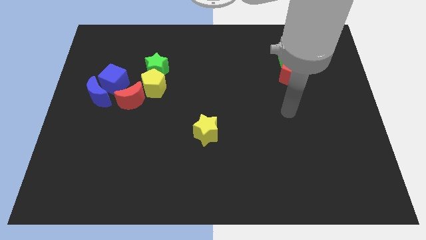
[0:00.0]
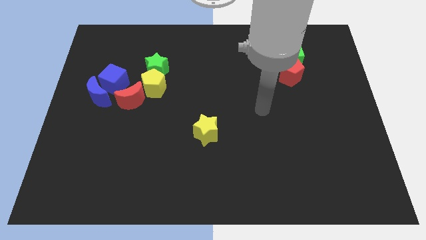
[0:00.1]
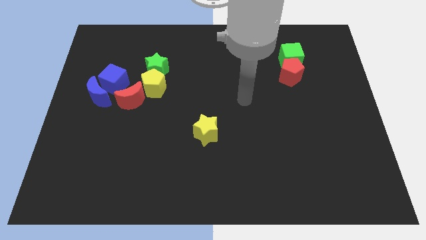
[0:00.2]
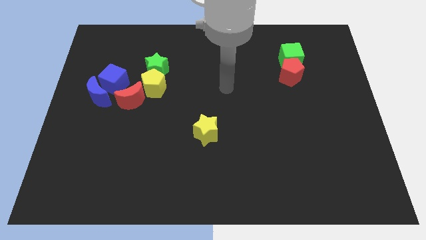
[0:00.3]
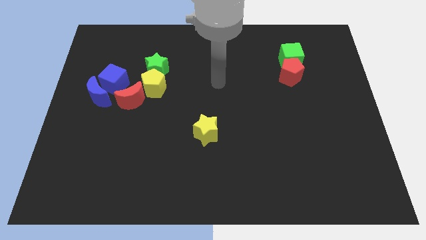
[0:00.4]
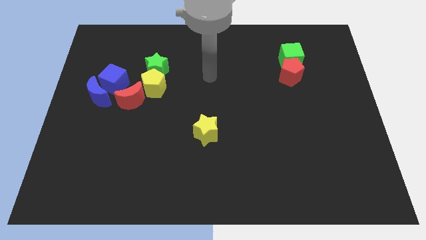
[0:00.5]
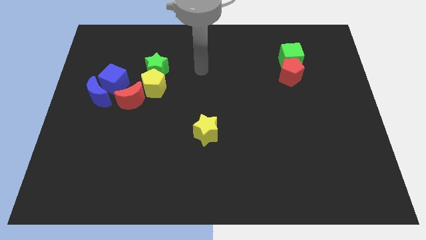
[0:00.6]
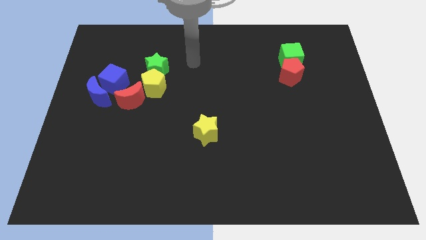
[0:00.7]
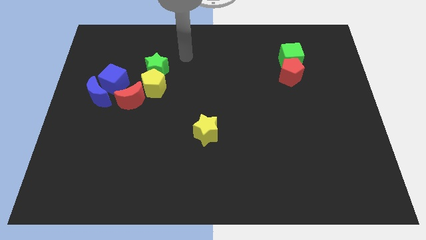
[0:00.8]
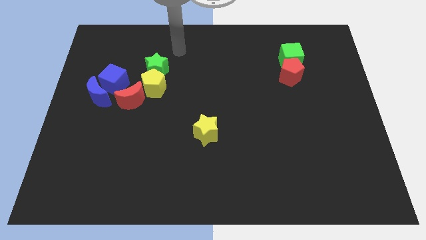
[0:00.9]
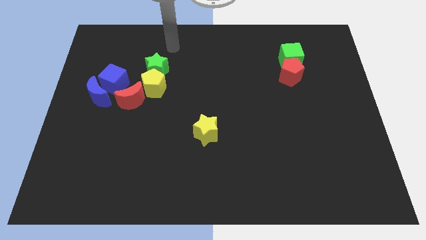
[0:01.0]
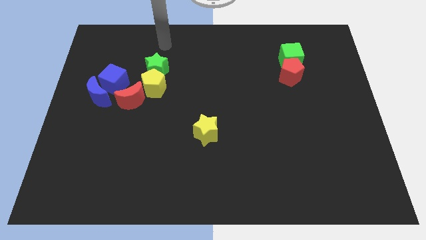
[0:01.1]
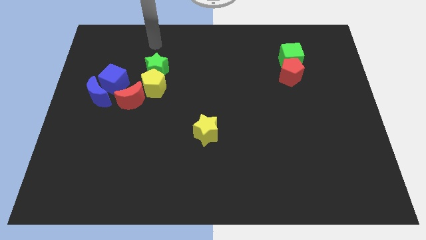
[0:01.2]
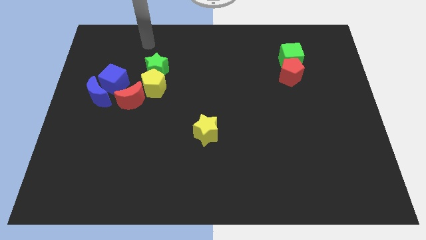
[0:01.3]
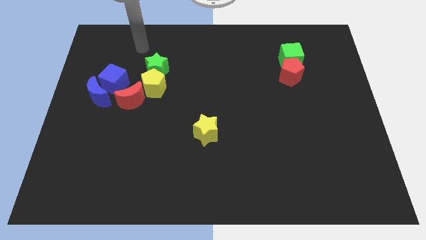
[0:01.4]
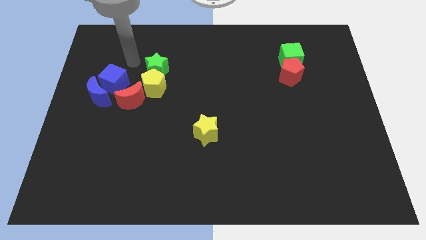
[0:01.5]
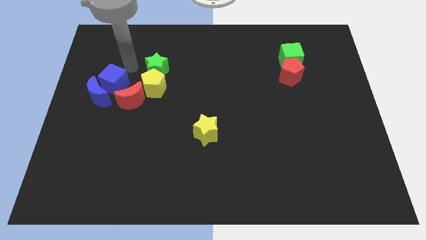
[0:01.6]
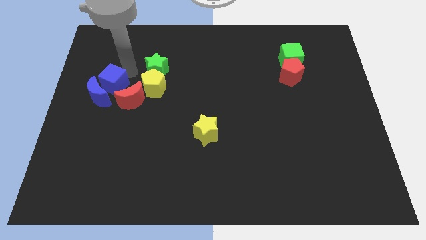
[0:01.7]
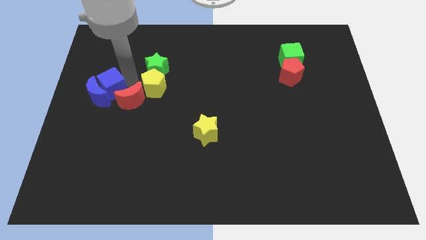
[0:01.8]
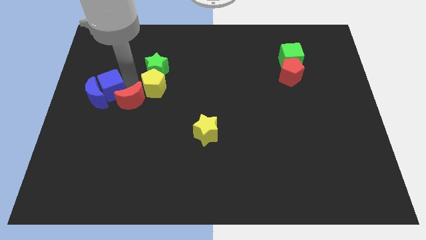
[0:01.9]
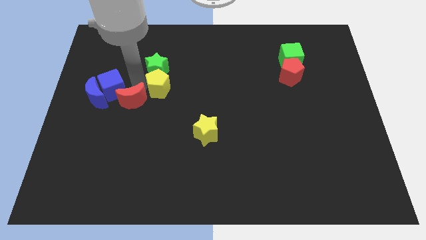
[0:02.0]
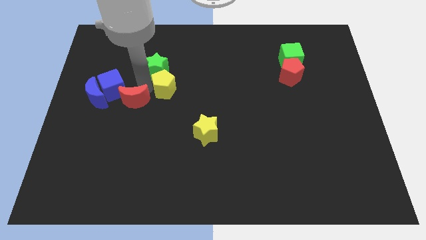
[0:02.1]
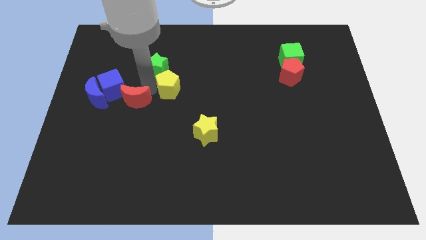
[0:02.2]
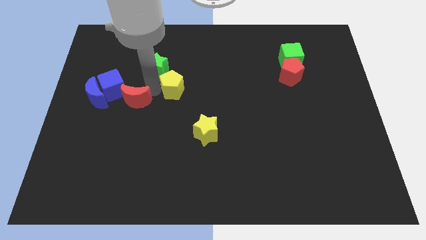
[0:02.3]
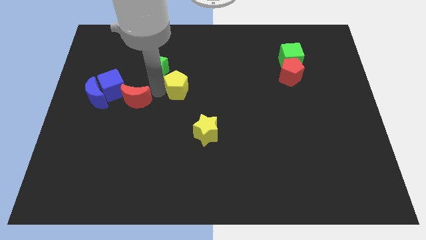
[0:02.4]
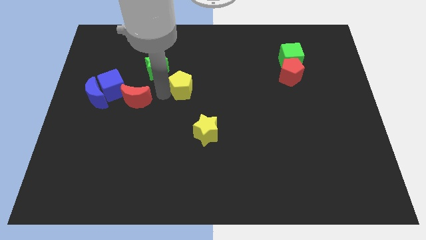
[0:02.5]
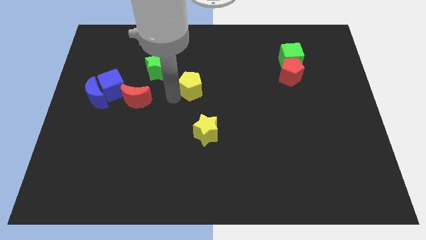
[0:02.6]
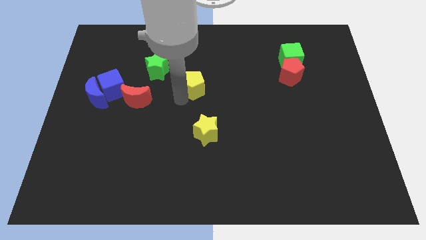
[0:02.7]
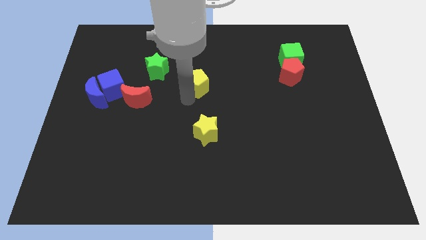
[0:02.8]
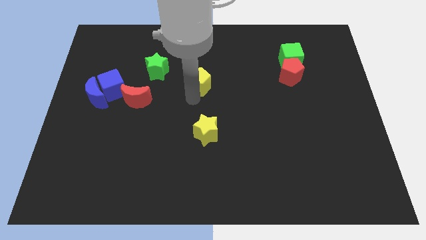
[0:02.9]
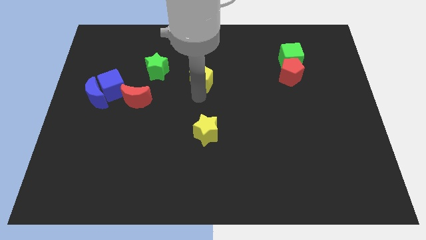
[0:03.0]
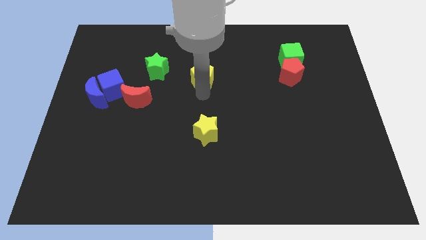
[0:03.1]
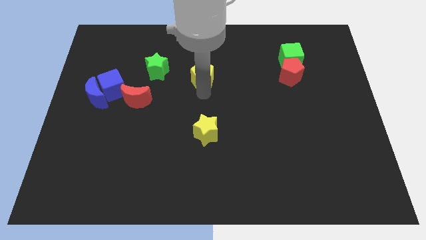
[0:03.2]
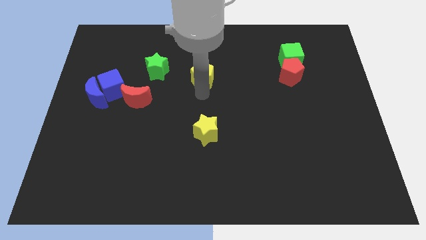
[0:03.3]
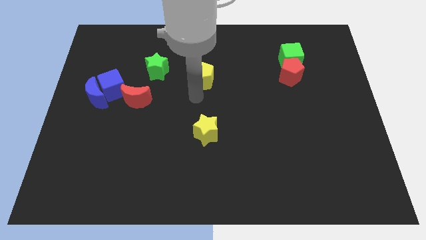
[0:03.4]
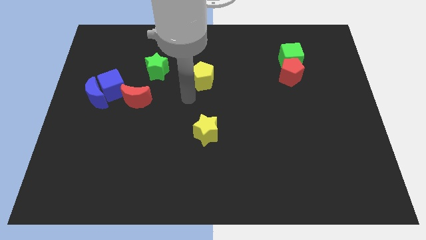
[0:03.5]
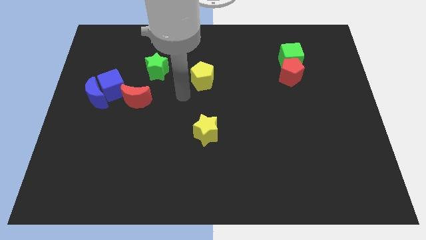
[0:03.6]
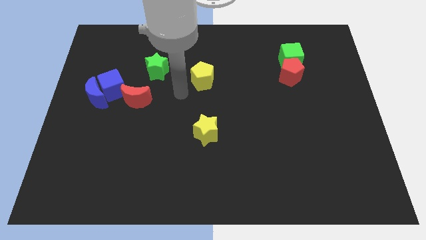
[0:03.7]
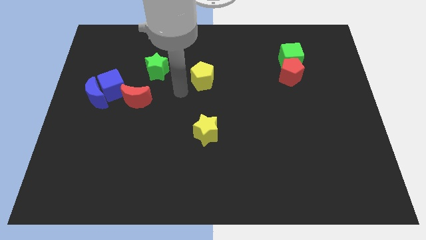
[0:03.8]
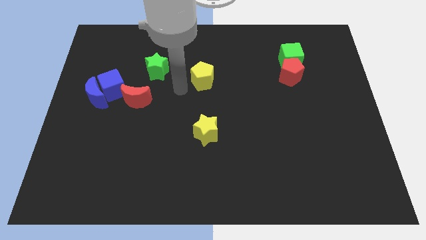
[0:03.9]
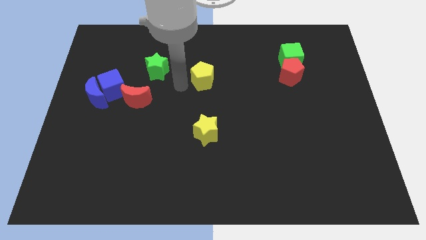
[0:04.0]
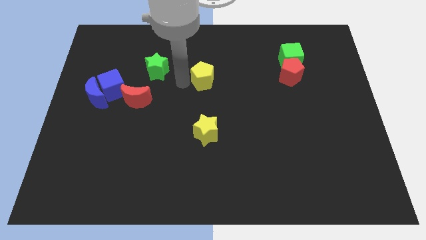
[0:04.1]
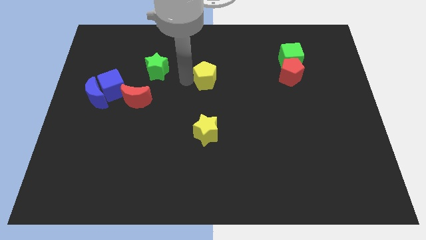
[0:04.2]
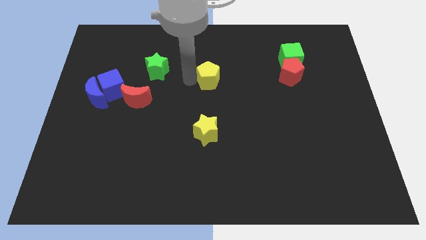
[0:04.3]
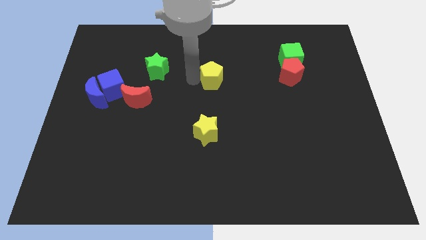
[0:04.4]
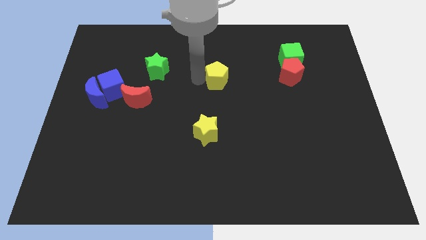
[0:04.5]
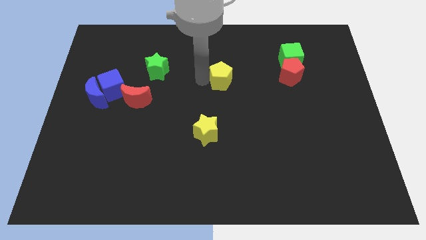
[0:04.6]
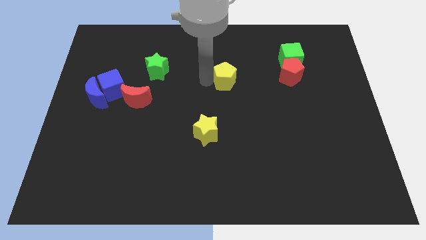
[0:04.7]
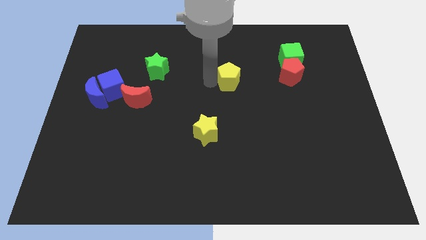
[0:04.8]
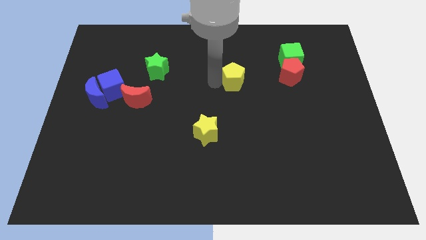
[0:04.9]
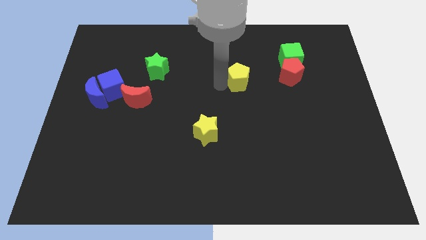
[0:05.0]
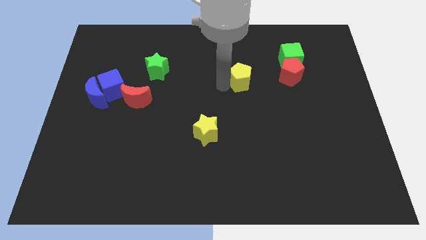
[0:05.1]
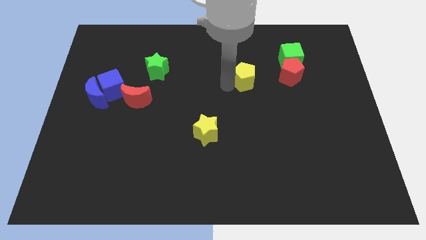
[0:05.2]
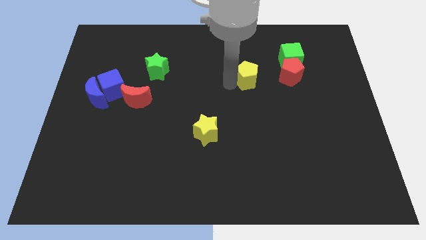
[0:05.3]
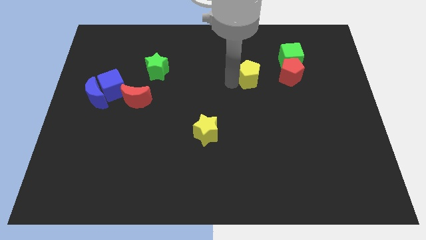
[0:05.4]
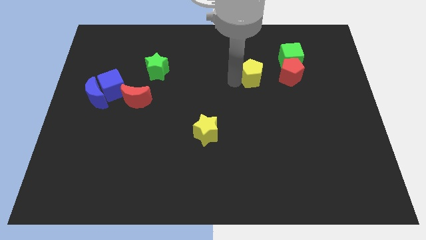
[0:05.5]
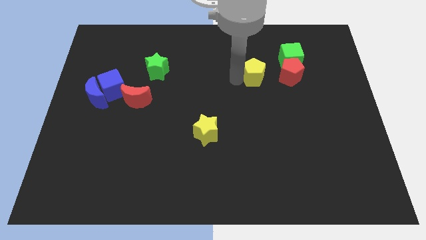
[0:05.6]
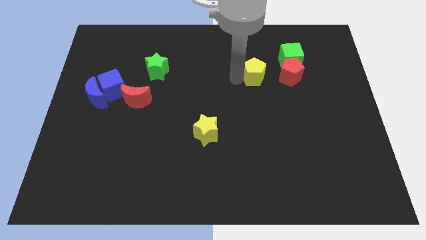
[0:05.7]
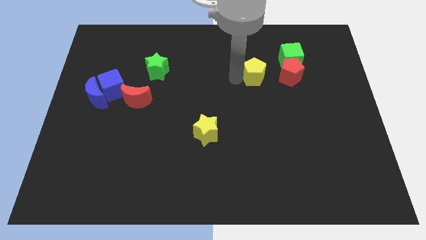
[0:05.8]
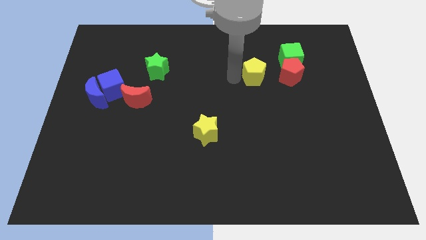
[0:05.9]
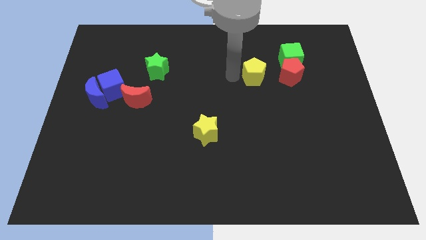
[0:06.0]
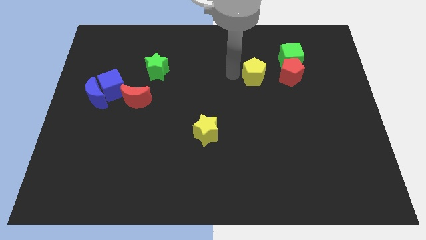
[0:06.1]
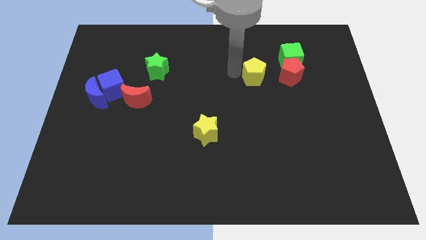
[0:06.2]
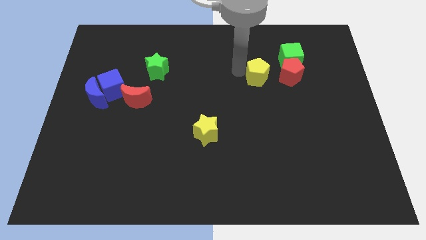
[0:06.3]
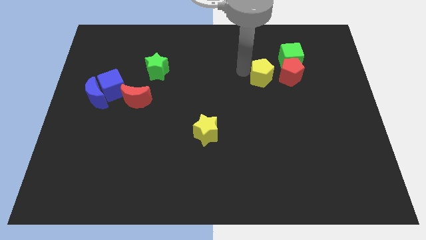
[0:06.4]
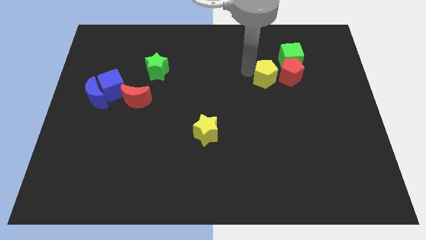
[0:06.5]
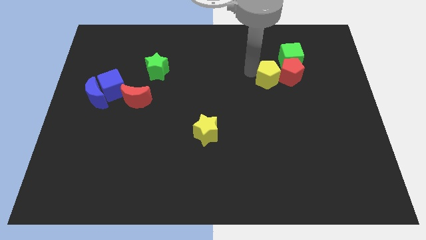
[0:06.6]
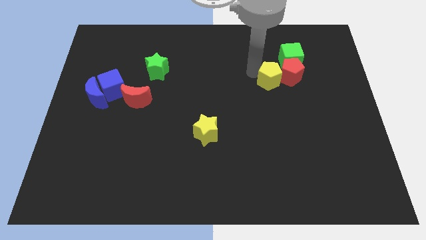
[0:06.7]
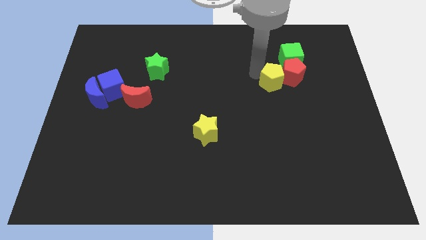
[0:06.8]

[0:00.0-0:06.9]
move the yellow pentagon next to the red pentagon

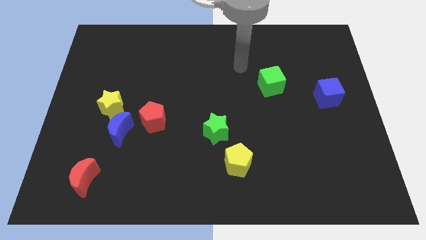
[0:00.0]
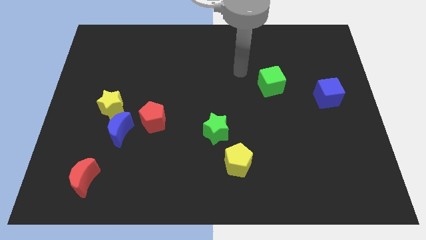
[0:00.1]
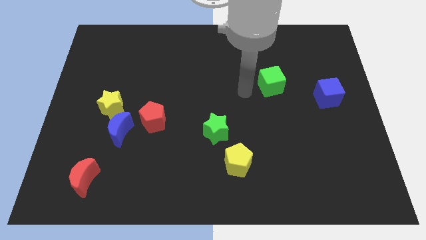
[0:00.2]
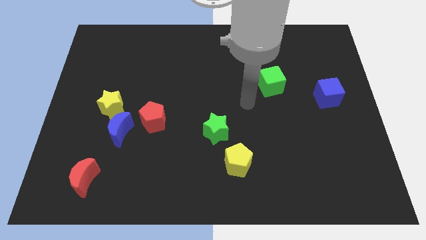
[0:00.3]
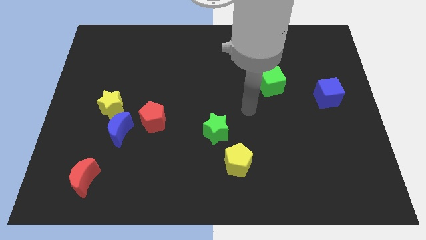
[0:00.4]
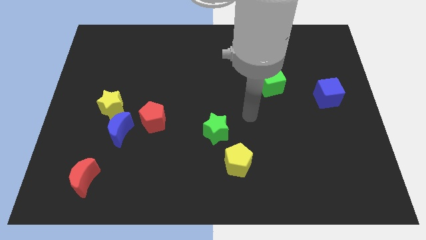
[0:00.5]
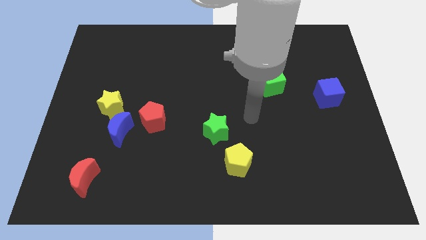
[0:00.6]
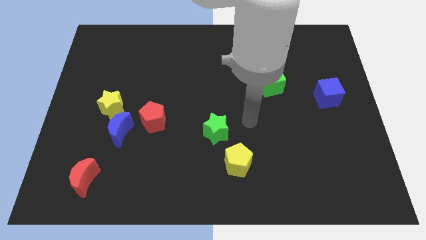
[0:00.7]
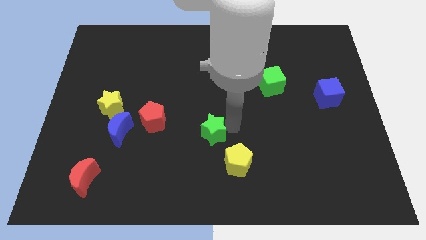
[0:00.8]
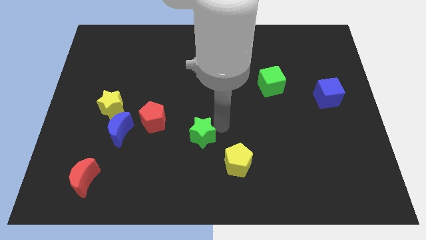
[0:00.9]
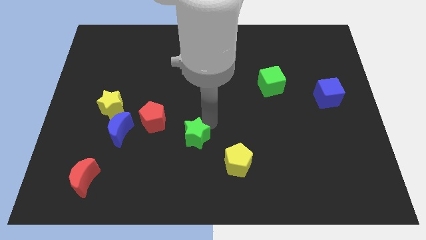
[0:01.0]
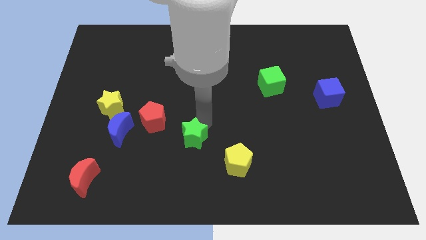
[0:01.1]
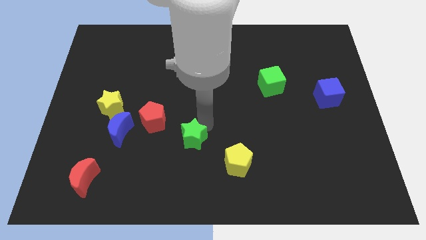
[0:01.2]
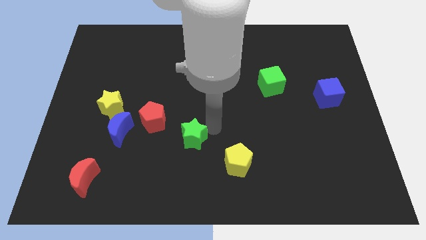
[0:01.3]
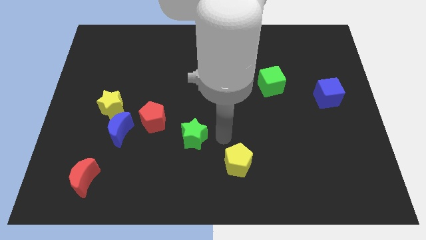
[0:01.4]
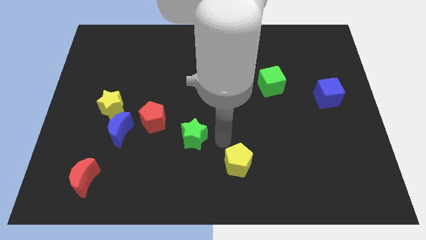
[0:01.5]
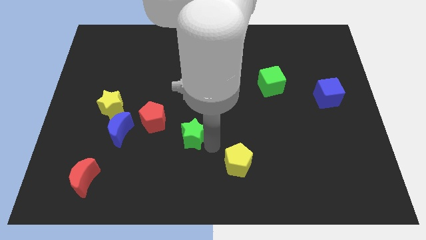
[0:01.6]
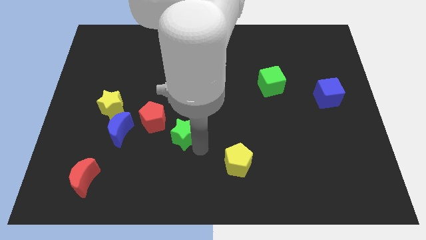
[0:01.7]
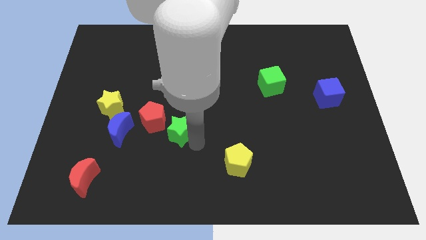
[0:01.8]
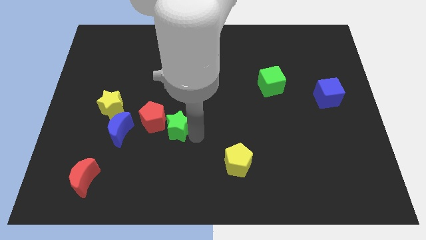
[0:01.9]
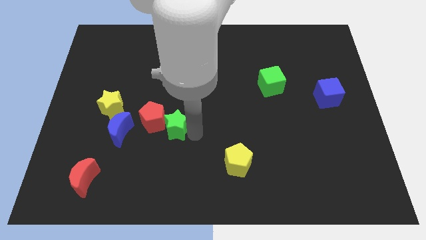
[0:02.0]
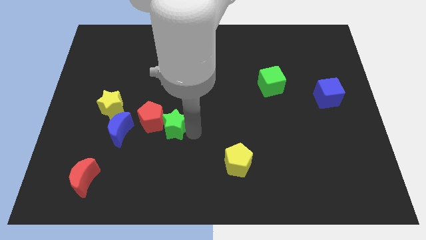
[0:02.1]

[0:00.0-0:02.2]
put the green star to the red pentagon
